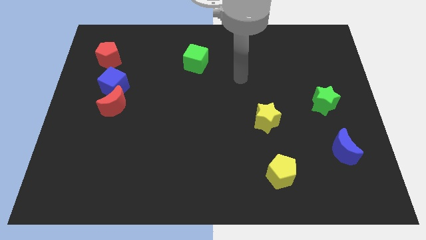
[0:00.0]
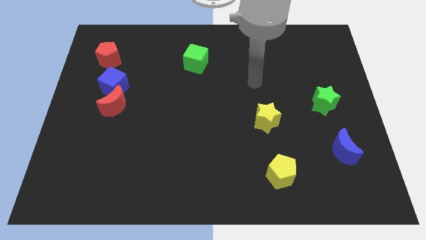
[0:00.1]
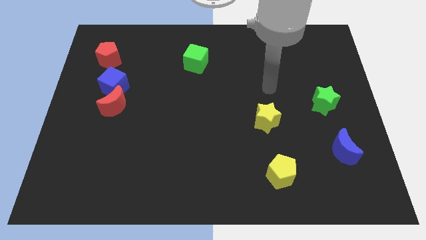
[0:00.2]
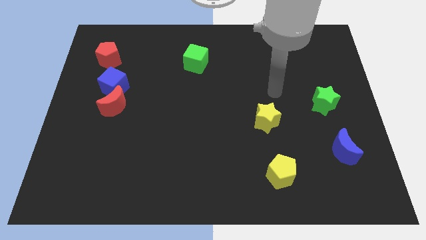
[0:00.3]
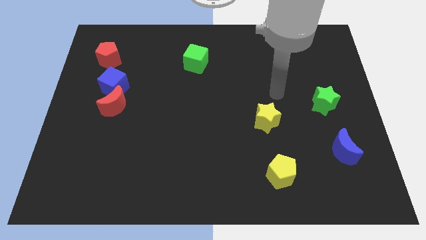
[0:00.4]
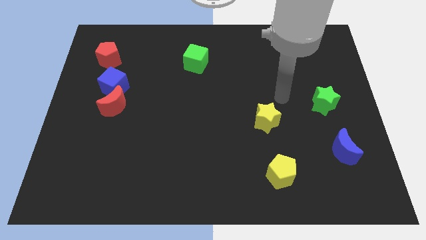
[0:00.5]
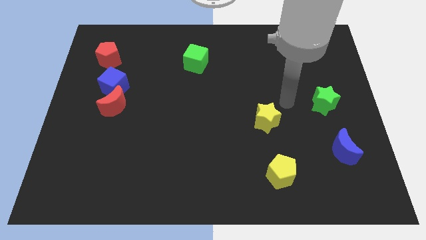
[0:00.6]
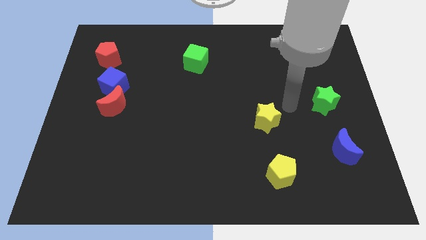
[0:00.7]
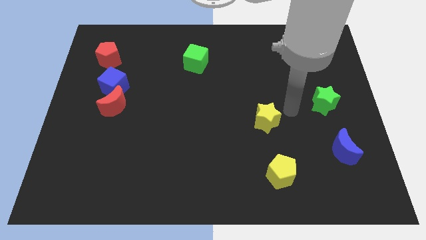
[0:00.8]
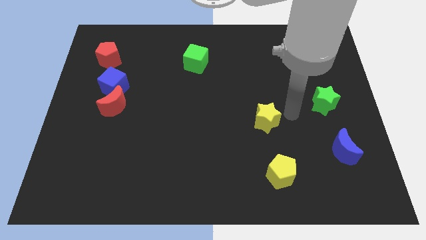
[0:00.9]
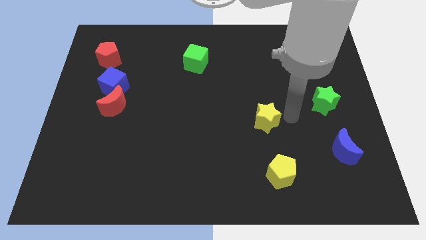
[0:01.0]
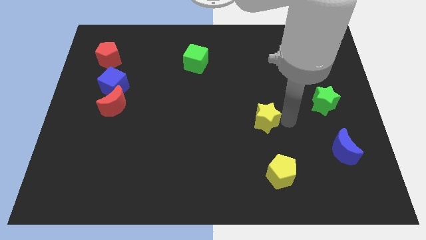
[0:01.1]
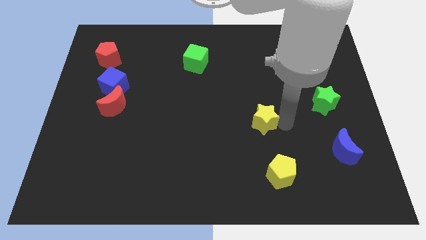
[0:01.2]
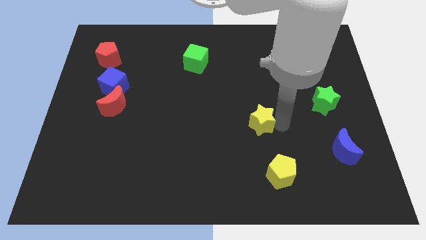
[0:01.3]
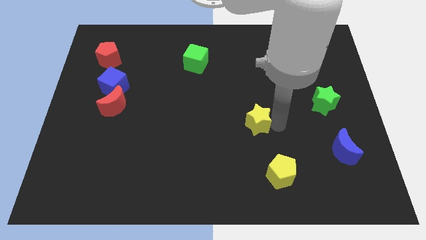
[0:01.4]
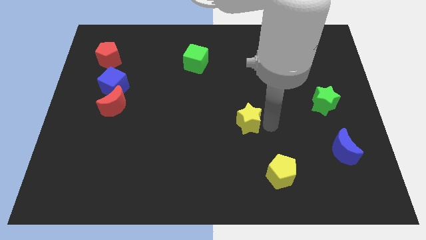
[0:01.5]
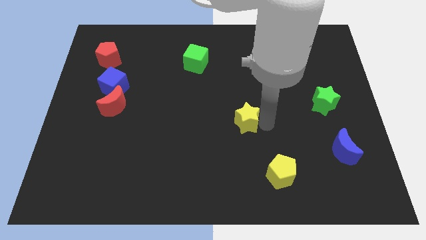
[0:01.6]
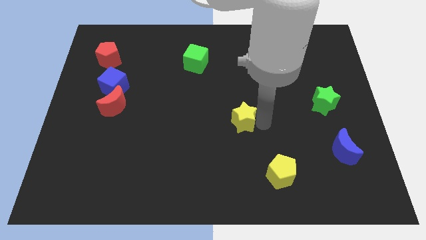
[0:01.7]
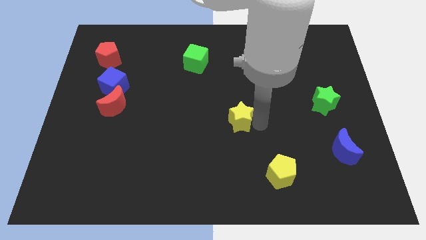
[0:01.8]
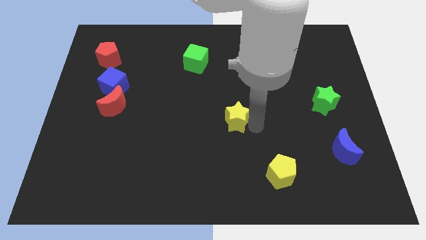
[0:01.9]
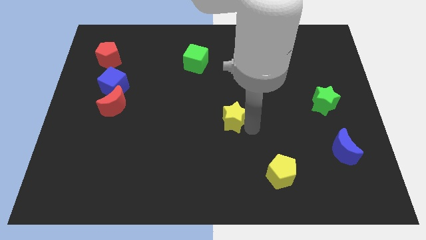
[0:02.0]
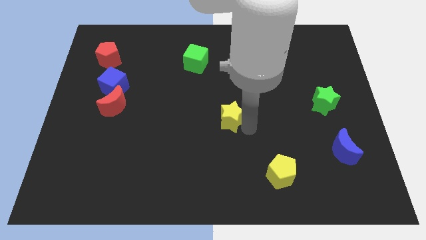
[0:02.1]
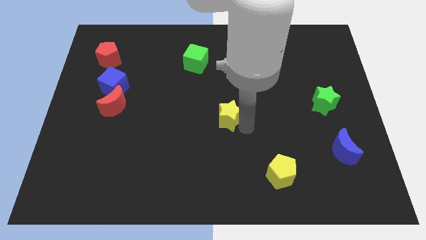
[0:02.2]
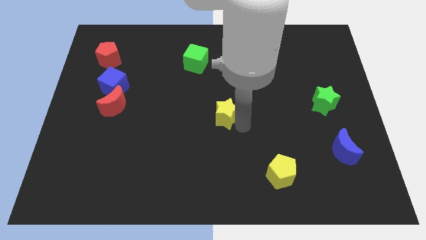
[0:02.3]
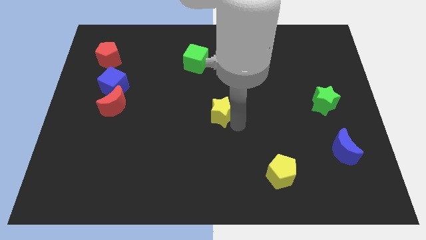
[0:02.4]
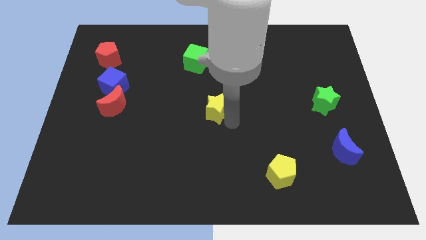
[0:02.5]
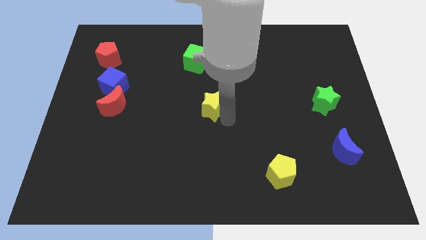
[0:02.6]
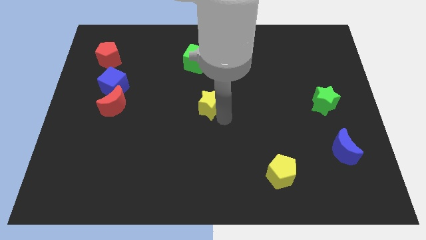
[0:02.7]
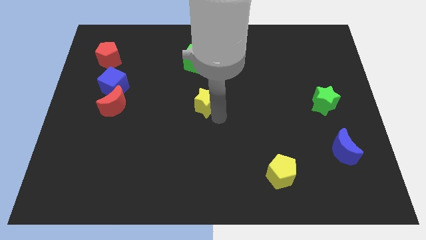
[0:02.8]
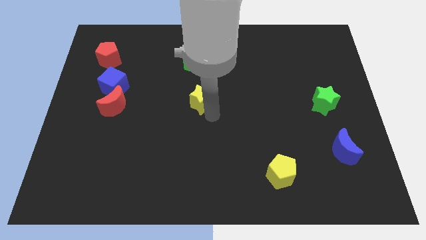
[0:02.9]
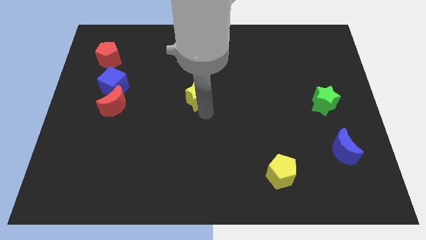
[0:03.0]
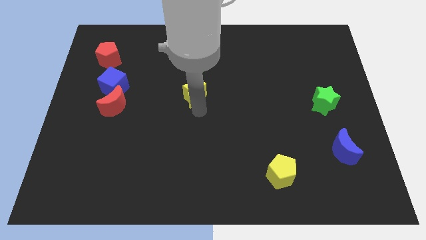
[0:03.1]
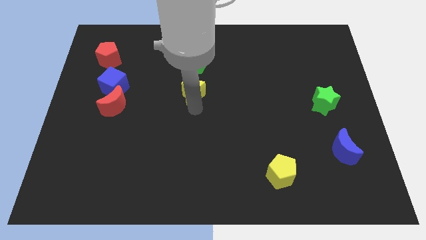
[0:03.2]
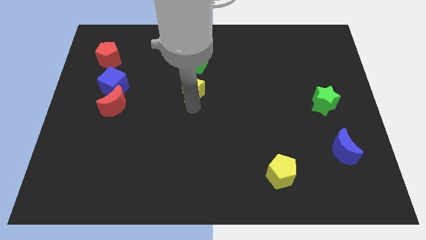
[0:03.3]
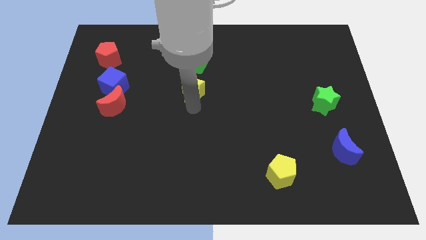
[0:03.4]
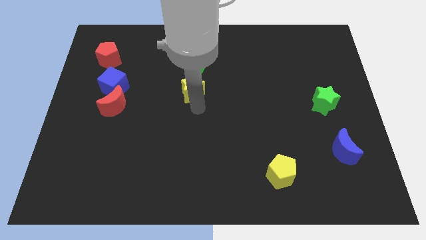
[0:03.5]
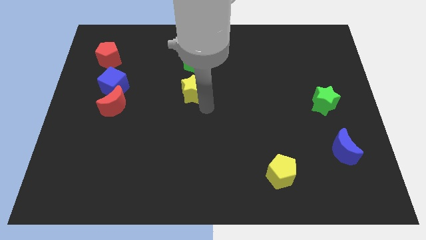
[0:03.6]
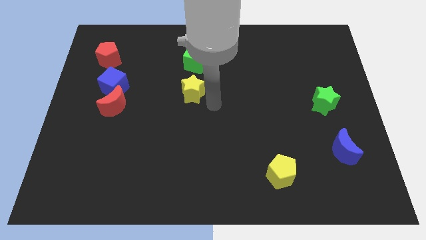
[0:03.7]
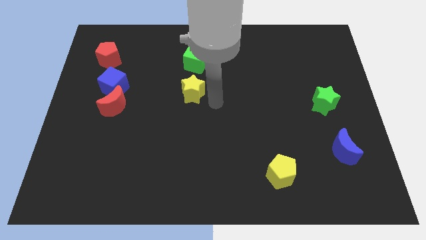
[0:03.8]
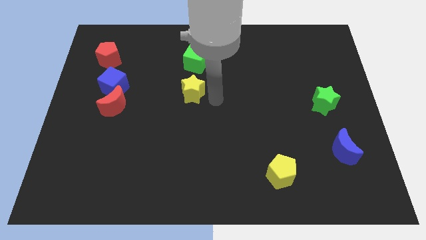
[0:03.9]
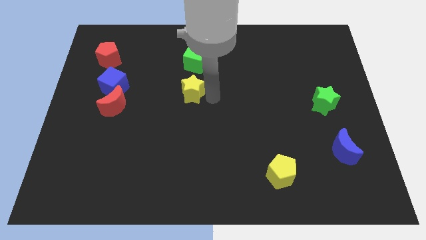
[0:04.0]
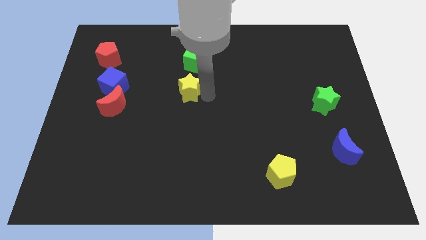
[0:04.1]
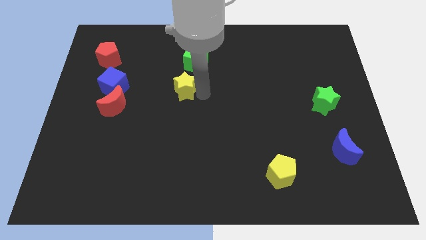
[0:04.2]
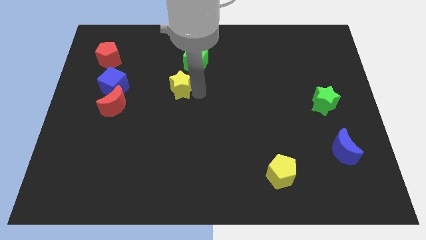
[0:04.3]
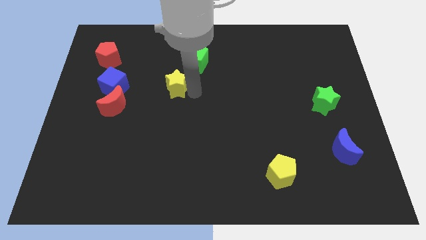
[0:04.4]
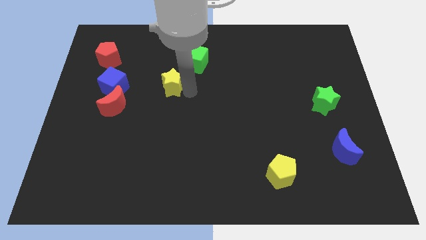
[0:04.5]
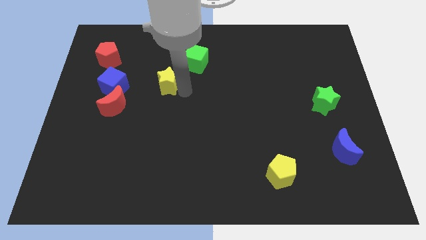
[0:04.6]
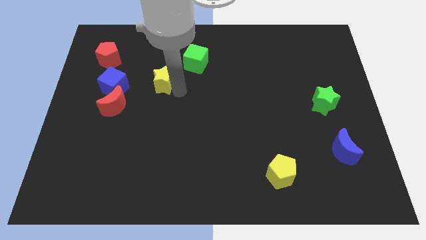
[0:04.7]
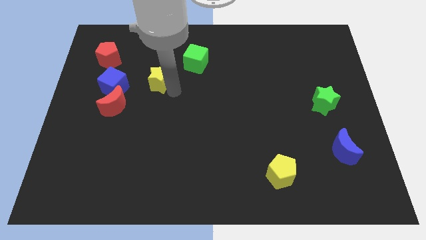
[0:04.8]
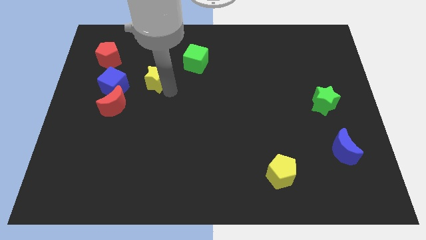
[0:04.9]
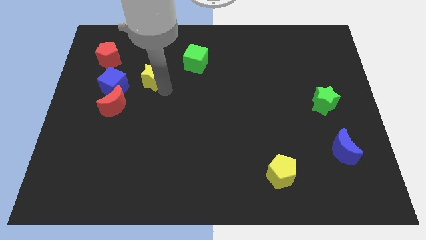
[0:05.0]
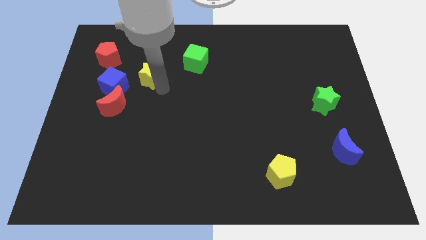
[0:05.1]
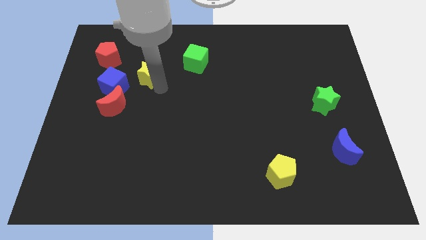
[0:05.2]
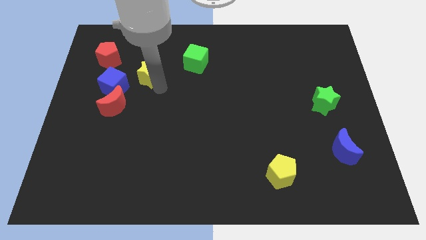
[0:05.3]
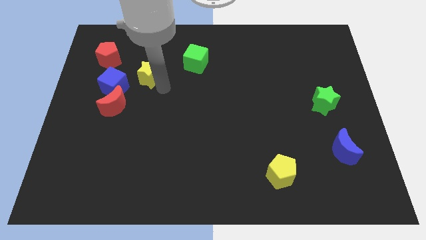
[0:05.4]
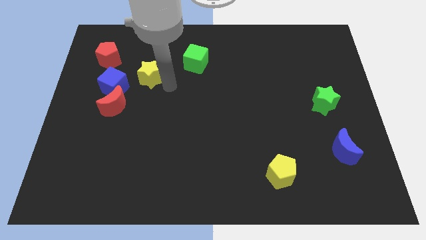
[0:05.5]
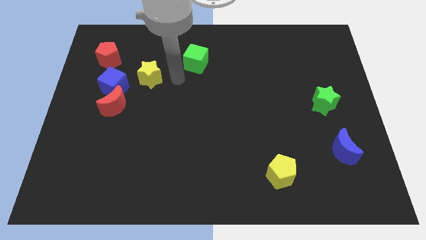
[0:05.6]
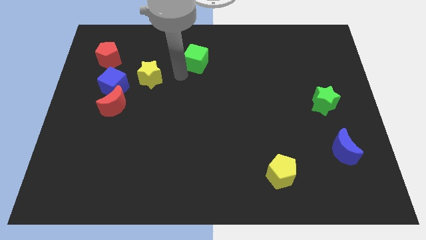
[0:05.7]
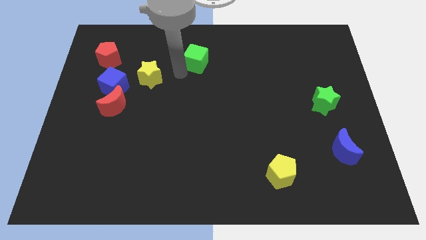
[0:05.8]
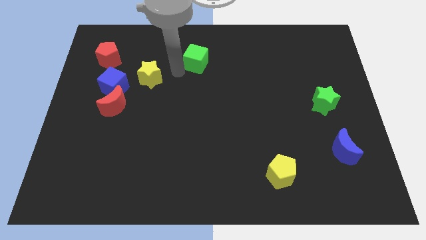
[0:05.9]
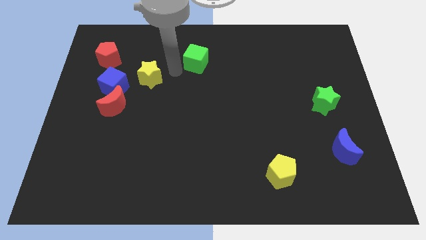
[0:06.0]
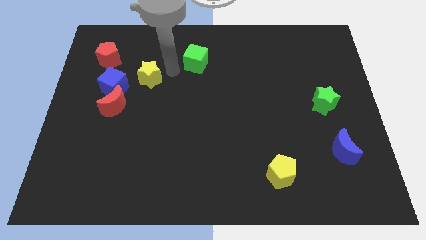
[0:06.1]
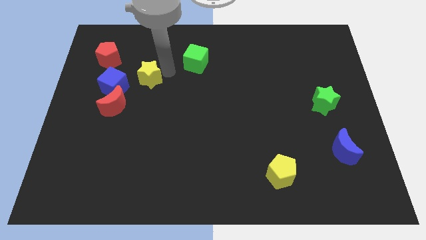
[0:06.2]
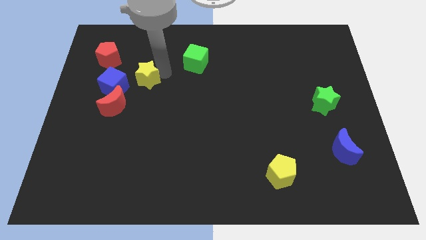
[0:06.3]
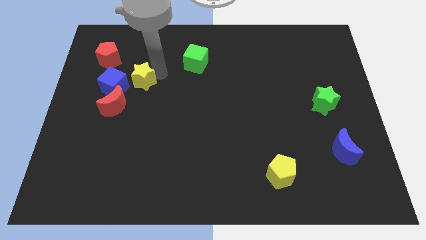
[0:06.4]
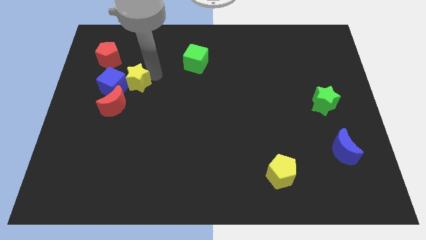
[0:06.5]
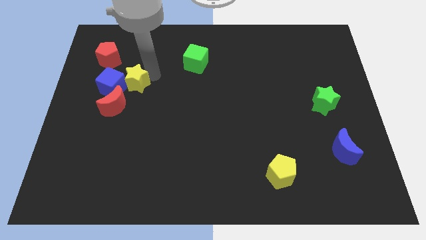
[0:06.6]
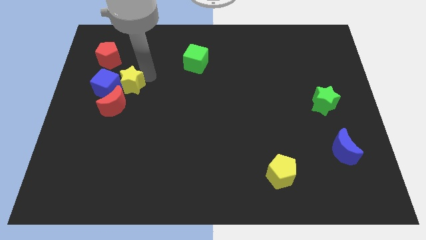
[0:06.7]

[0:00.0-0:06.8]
move the yellow star towards the blue cube

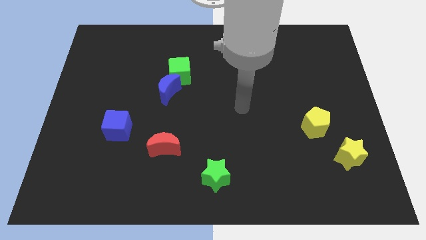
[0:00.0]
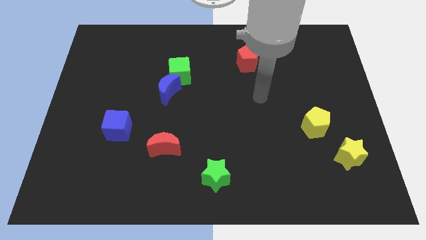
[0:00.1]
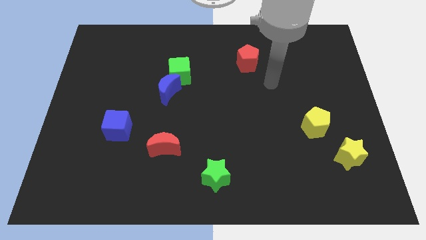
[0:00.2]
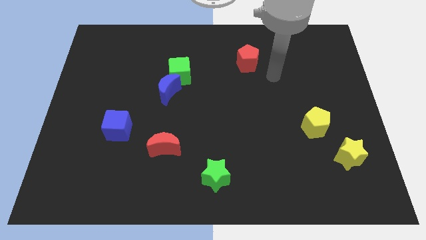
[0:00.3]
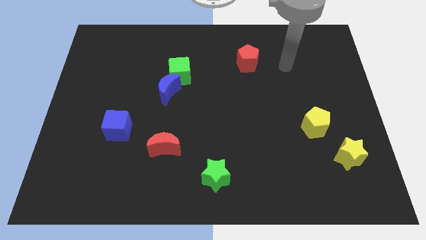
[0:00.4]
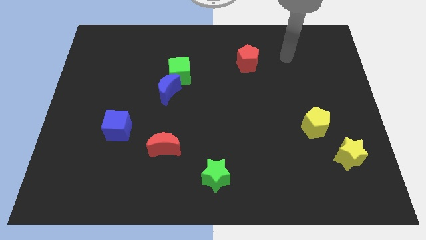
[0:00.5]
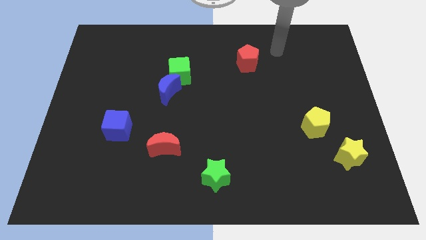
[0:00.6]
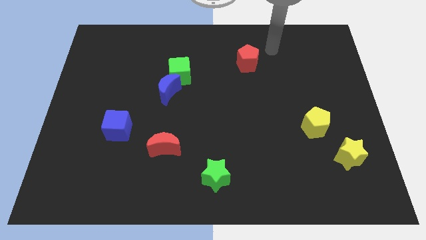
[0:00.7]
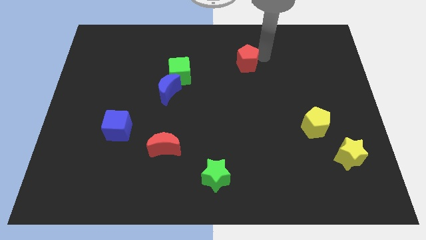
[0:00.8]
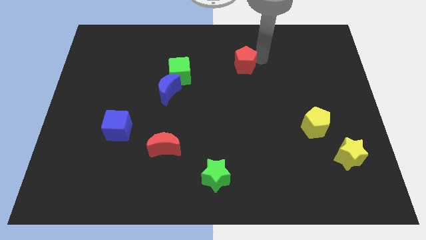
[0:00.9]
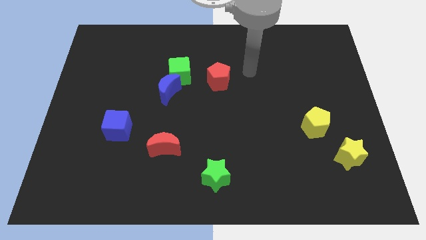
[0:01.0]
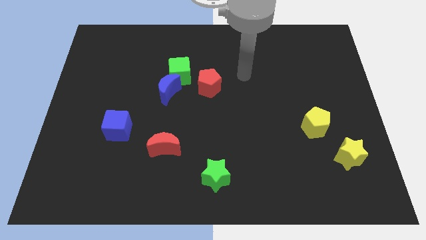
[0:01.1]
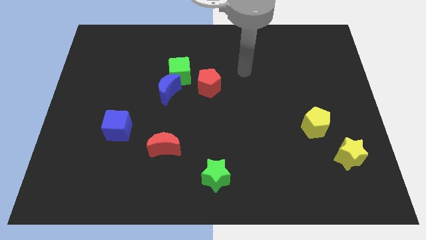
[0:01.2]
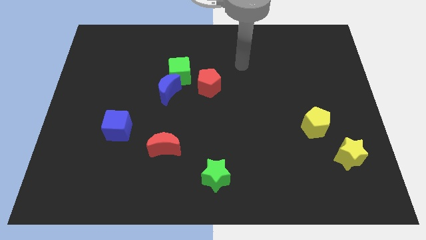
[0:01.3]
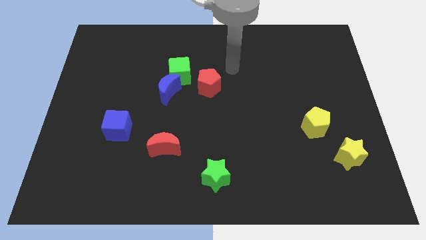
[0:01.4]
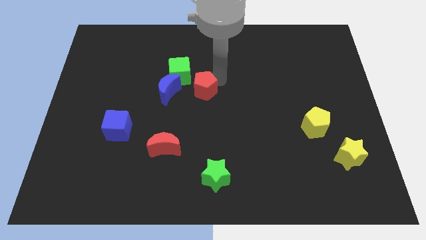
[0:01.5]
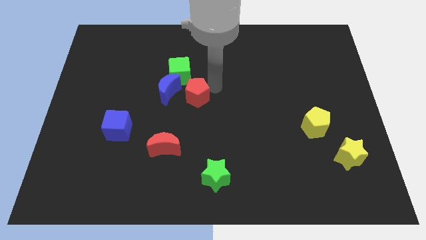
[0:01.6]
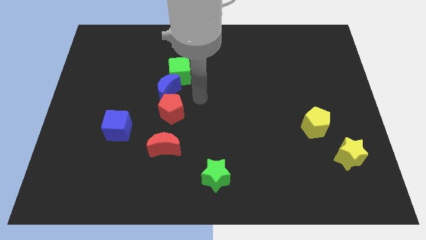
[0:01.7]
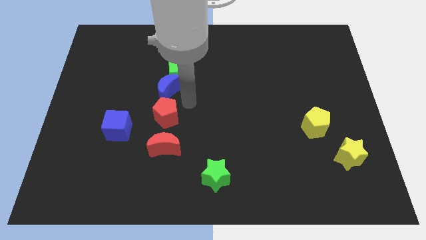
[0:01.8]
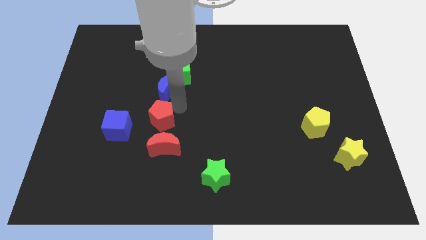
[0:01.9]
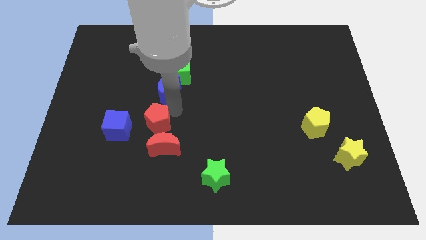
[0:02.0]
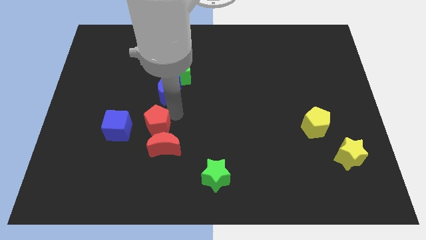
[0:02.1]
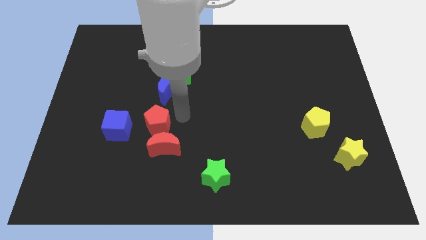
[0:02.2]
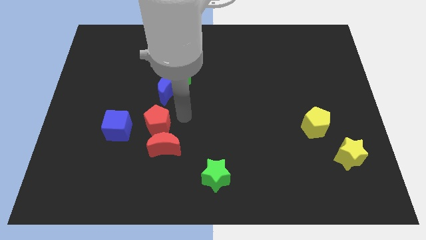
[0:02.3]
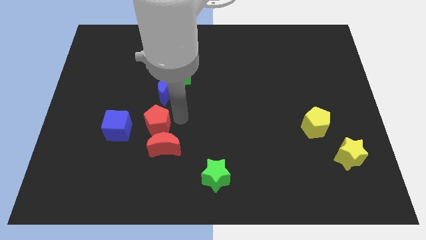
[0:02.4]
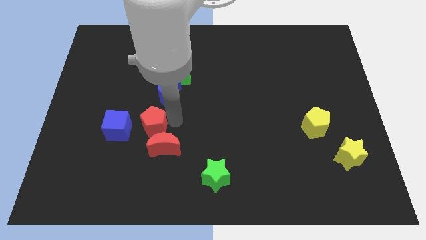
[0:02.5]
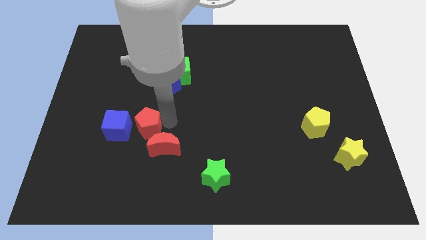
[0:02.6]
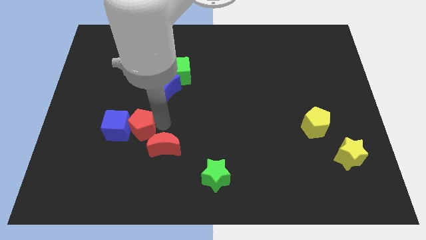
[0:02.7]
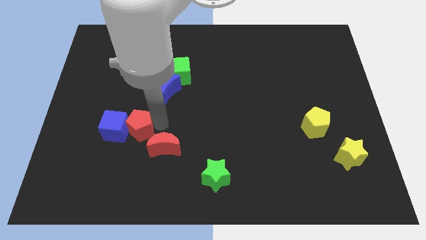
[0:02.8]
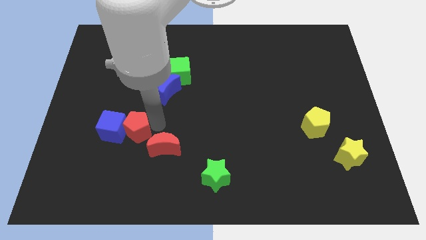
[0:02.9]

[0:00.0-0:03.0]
push the red pentagon towards the blue cube
